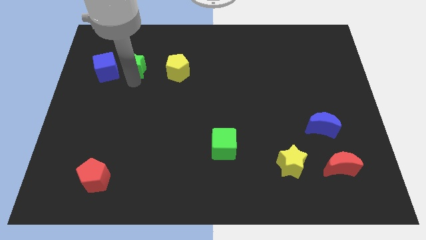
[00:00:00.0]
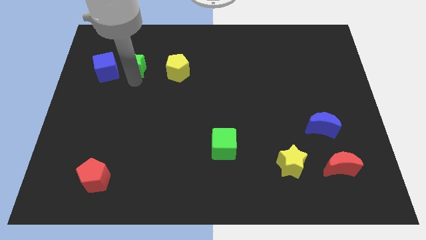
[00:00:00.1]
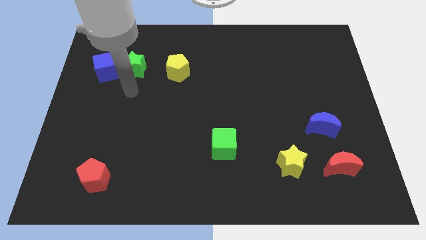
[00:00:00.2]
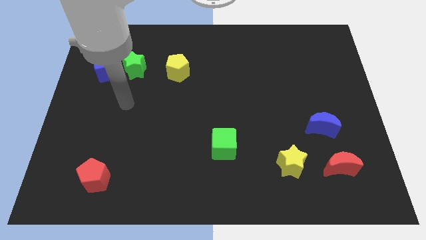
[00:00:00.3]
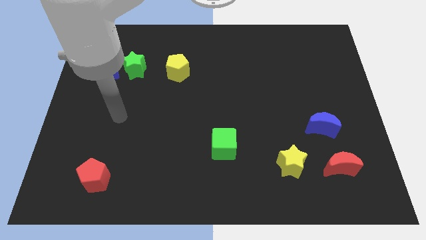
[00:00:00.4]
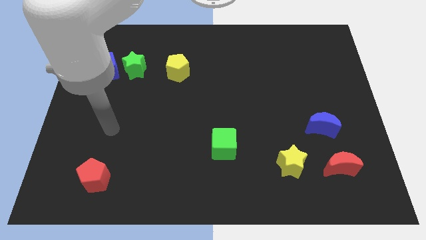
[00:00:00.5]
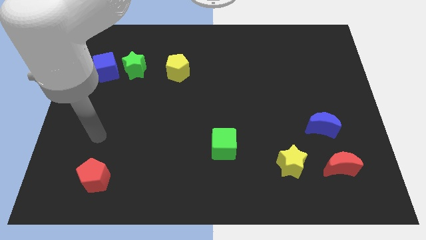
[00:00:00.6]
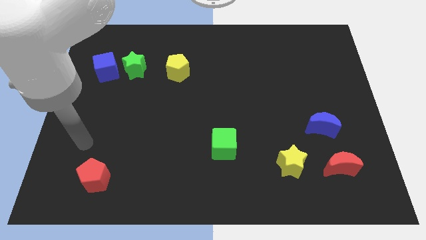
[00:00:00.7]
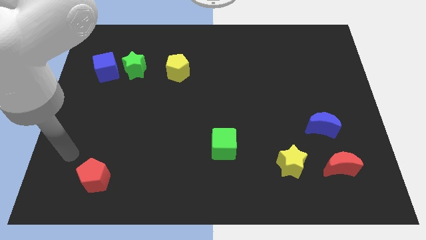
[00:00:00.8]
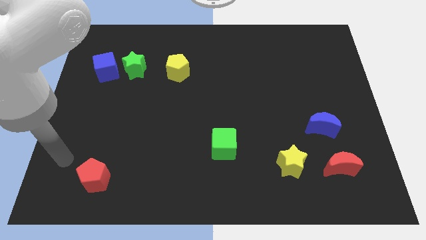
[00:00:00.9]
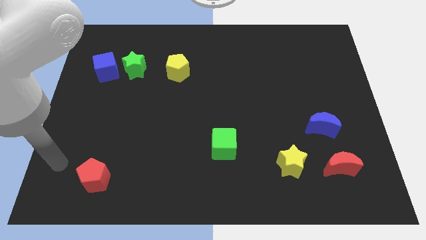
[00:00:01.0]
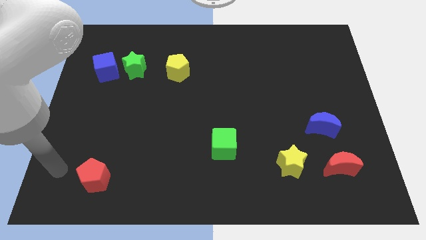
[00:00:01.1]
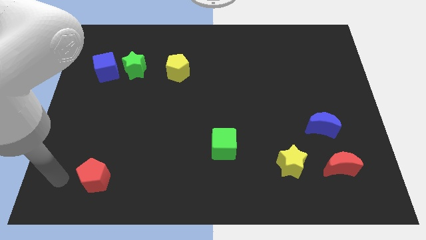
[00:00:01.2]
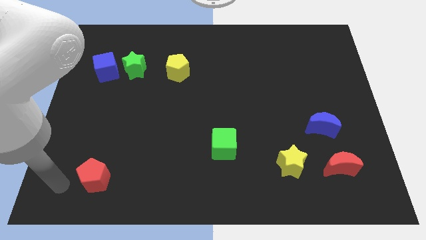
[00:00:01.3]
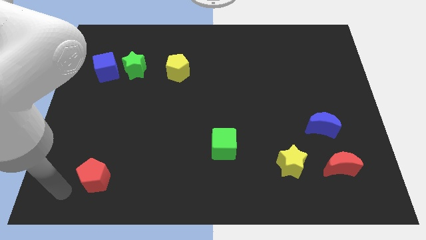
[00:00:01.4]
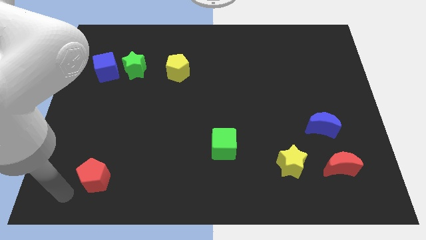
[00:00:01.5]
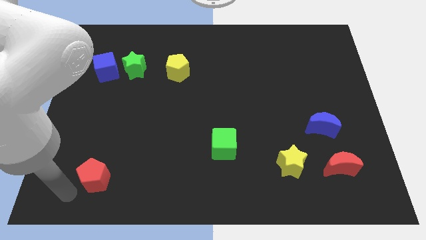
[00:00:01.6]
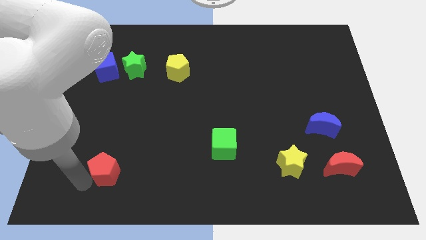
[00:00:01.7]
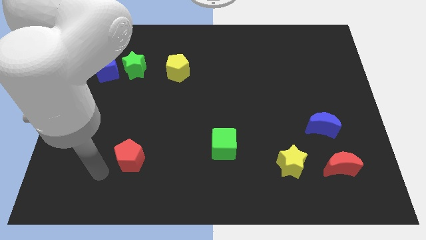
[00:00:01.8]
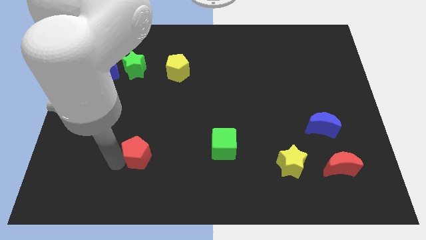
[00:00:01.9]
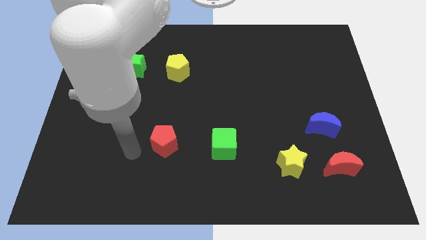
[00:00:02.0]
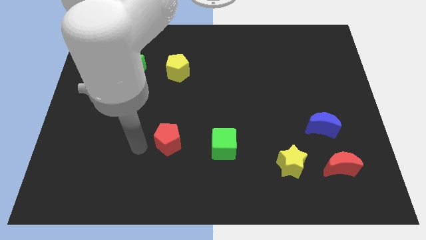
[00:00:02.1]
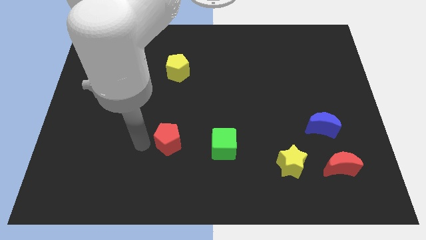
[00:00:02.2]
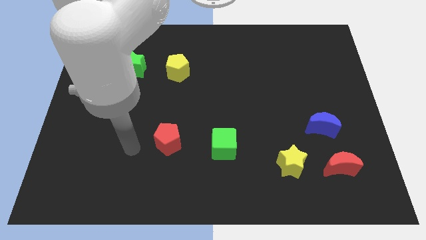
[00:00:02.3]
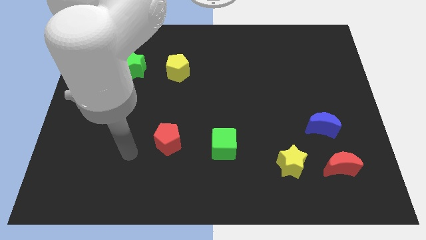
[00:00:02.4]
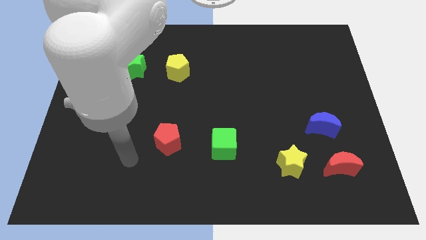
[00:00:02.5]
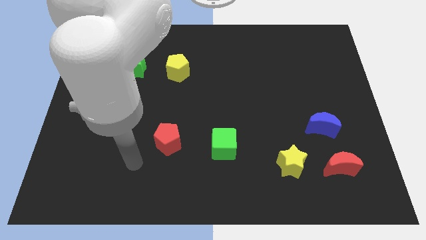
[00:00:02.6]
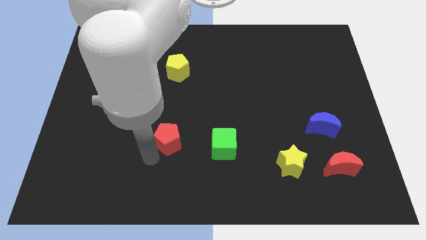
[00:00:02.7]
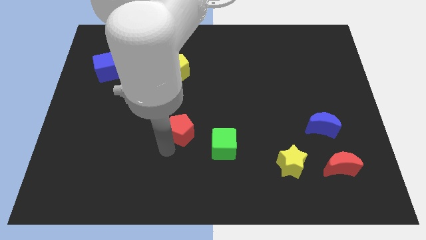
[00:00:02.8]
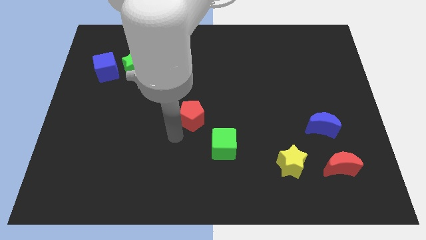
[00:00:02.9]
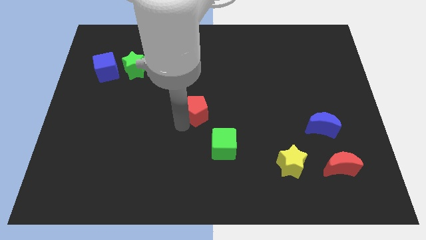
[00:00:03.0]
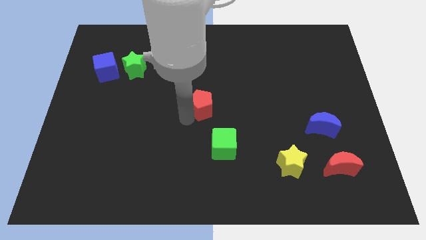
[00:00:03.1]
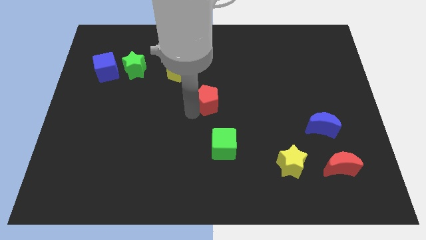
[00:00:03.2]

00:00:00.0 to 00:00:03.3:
push the red pentagon to the center of the board

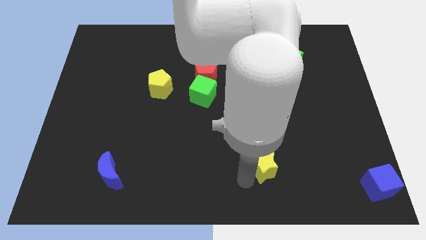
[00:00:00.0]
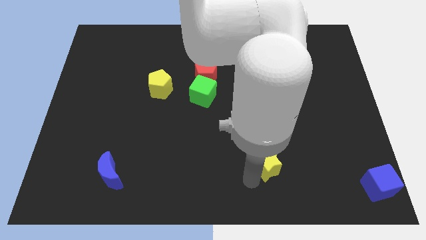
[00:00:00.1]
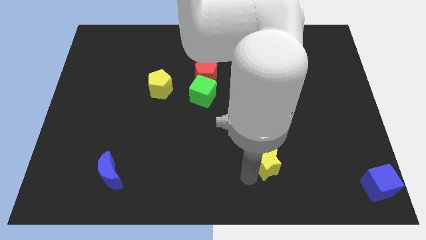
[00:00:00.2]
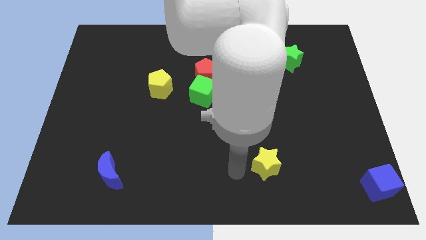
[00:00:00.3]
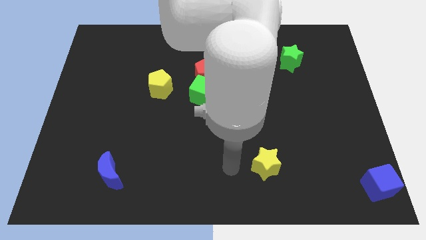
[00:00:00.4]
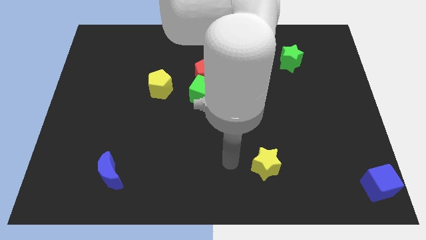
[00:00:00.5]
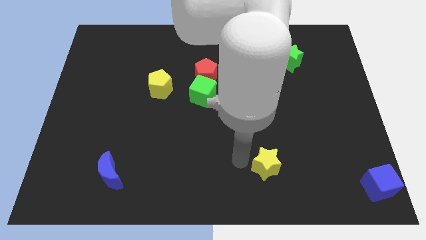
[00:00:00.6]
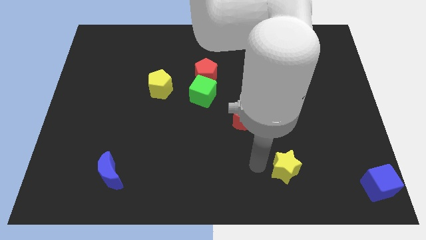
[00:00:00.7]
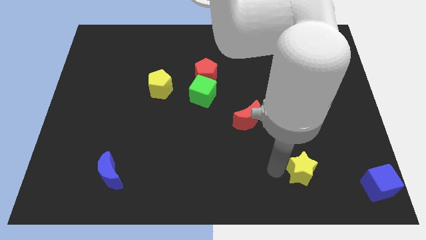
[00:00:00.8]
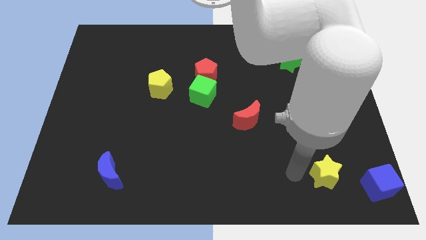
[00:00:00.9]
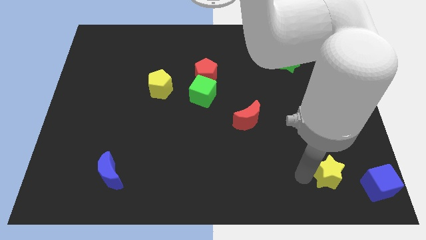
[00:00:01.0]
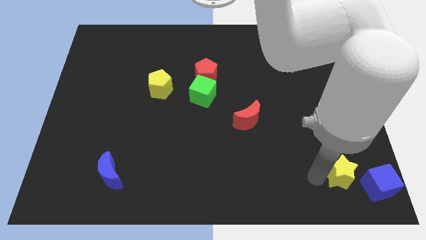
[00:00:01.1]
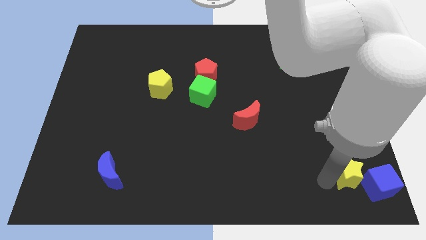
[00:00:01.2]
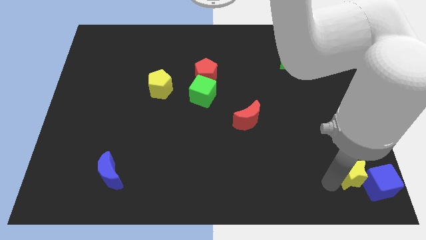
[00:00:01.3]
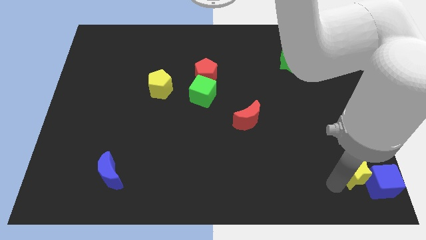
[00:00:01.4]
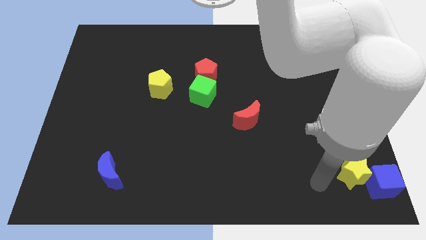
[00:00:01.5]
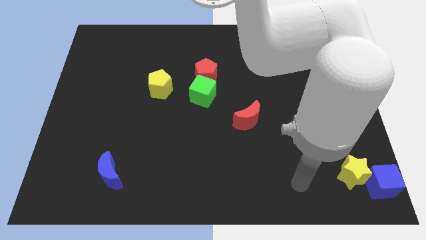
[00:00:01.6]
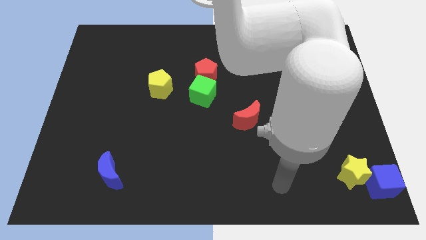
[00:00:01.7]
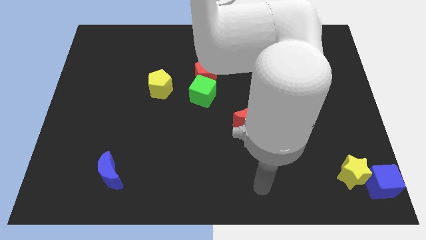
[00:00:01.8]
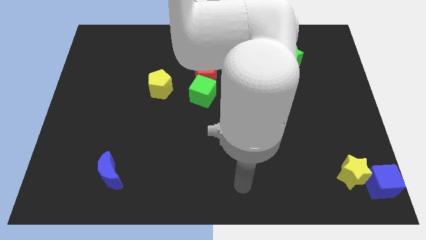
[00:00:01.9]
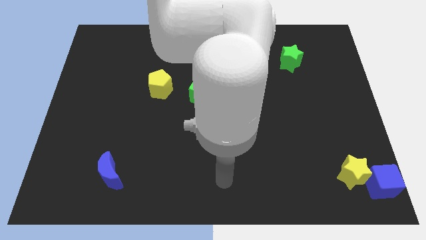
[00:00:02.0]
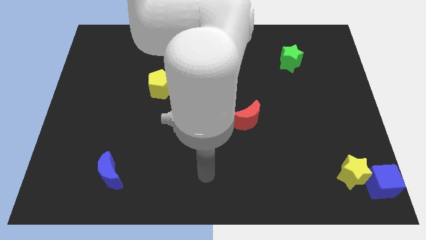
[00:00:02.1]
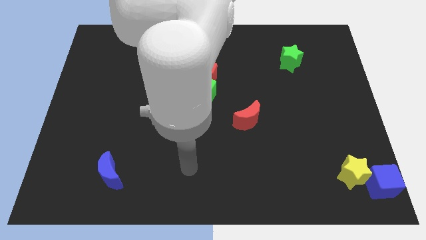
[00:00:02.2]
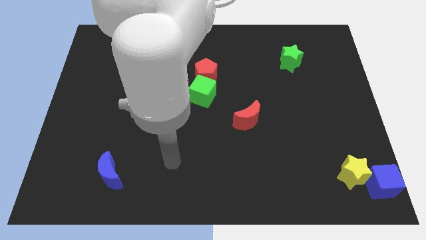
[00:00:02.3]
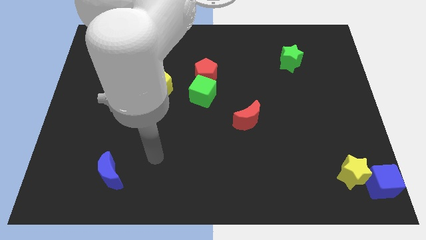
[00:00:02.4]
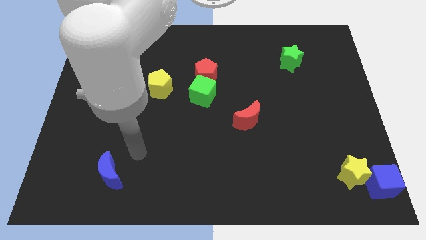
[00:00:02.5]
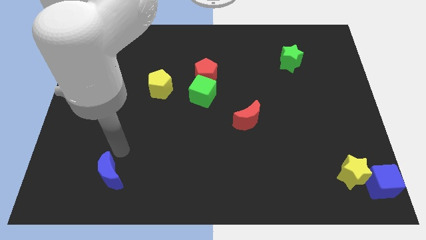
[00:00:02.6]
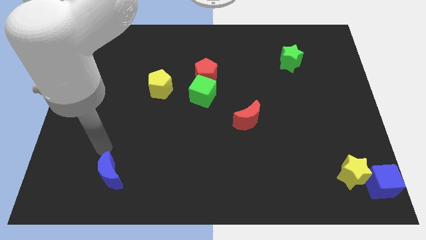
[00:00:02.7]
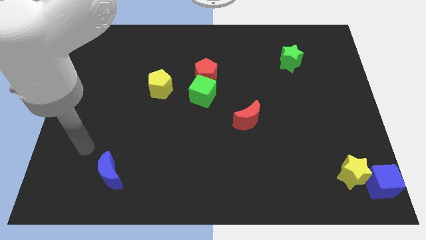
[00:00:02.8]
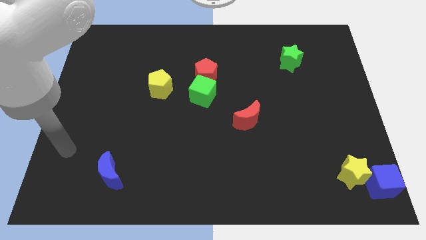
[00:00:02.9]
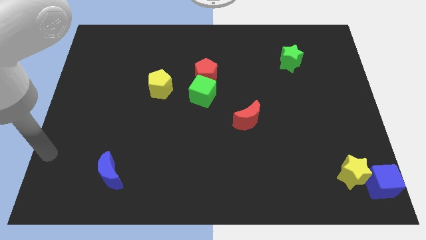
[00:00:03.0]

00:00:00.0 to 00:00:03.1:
move the yellow star into the left side of the blue cube

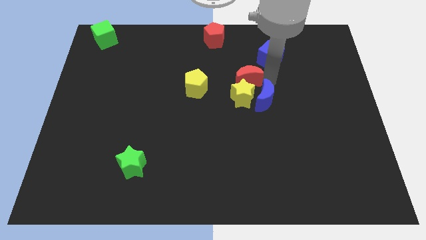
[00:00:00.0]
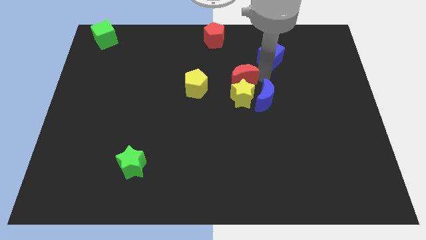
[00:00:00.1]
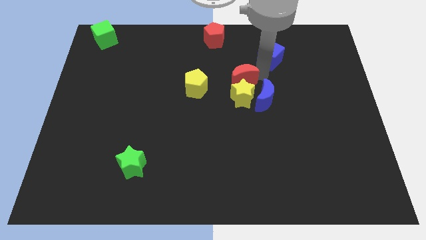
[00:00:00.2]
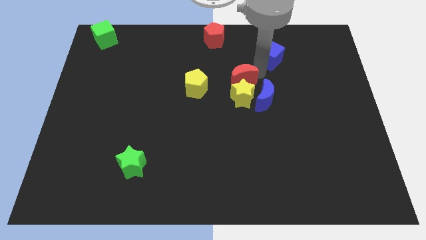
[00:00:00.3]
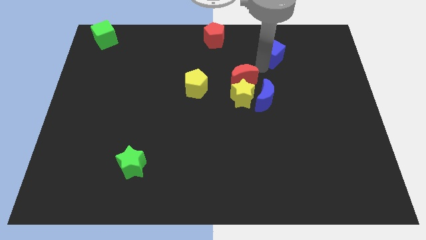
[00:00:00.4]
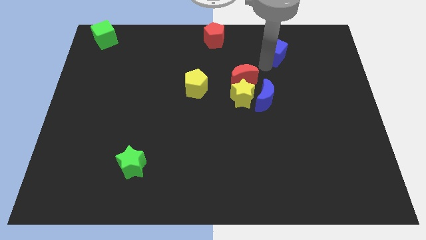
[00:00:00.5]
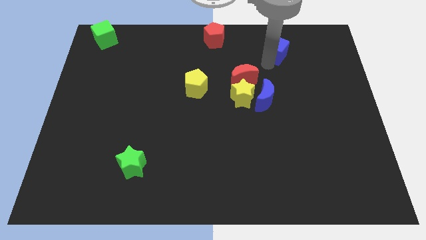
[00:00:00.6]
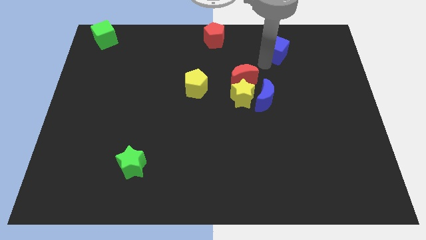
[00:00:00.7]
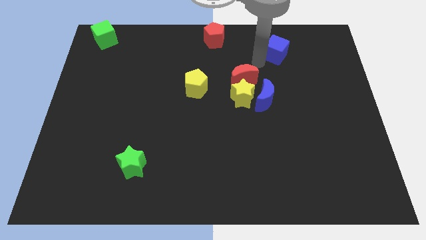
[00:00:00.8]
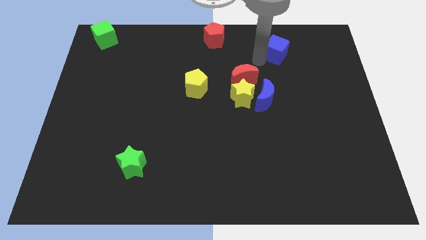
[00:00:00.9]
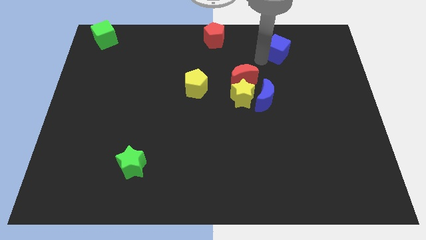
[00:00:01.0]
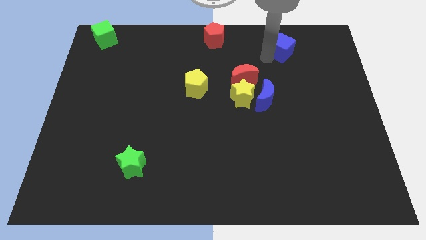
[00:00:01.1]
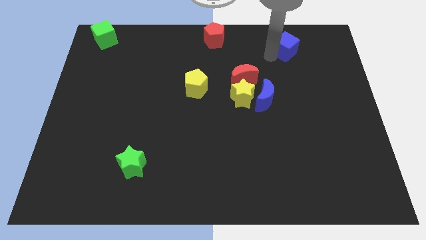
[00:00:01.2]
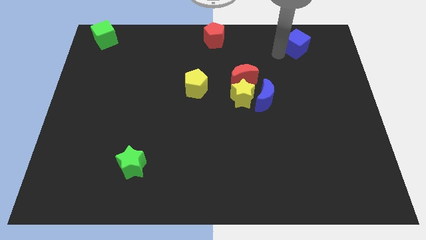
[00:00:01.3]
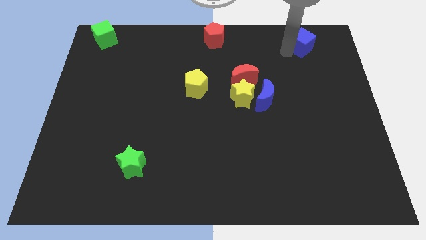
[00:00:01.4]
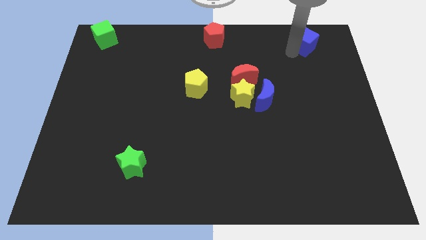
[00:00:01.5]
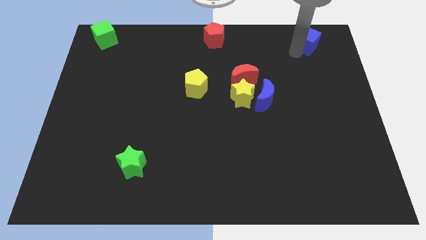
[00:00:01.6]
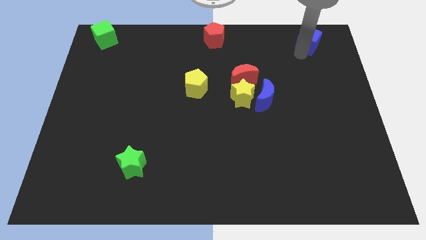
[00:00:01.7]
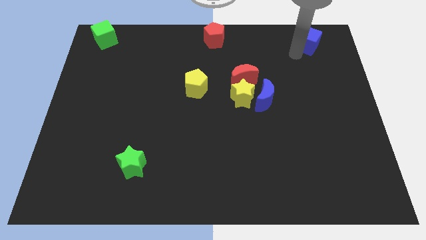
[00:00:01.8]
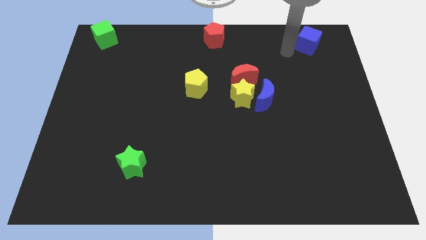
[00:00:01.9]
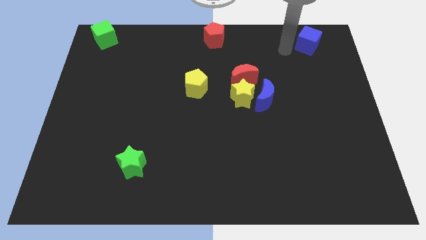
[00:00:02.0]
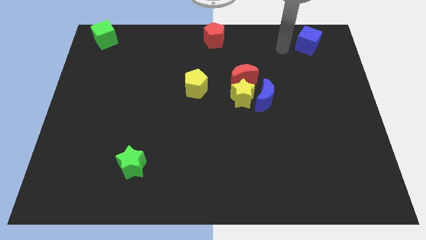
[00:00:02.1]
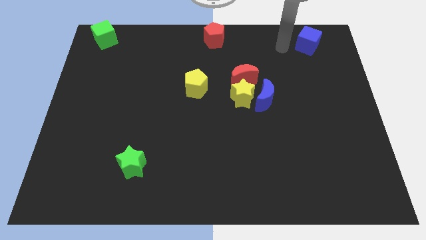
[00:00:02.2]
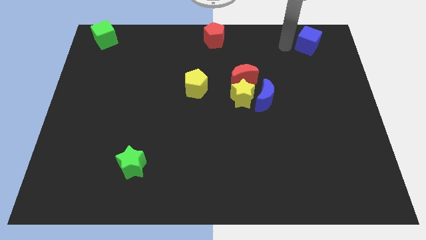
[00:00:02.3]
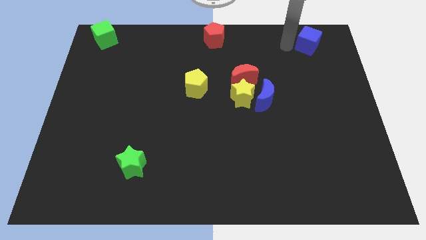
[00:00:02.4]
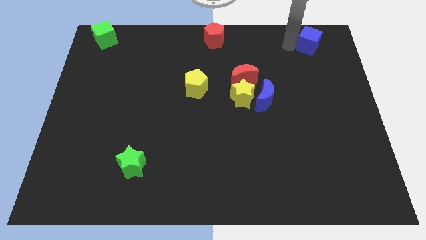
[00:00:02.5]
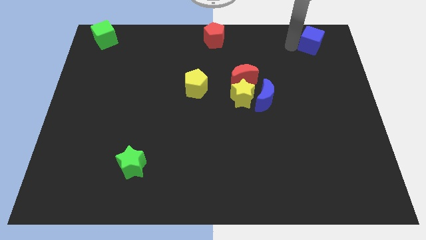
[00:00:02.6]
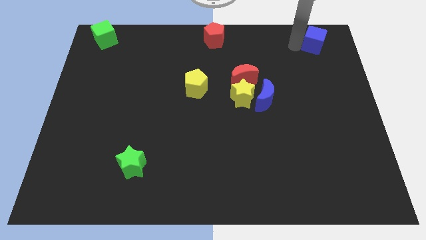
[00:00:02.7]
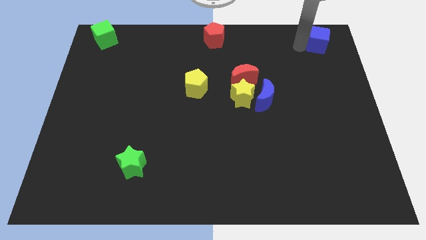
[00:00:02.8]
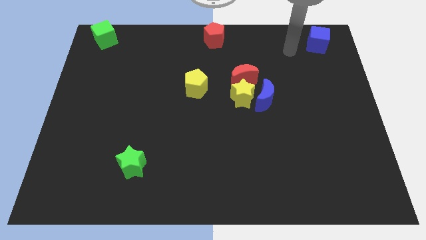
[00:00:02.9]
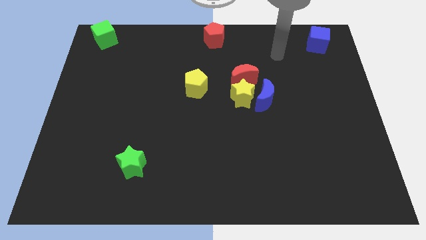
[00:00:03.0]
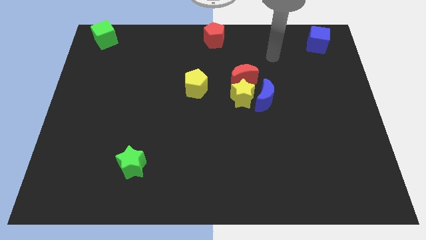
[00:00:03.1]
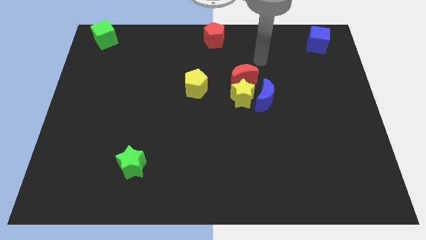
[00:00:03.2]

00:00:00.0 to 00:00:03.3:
move the blue cube diagonally towards the top right
